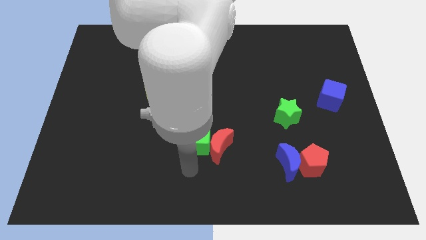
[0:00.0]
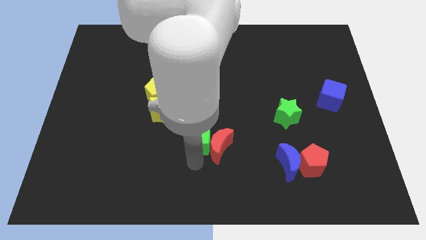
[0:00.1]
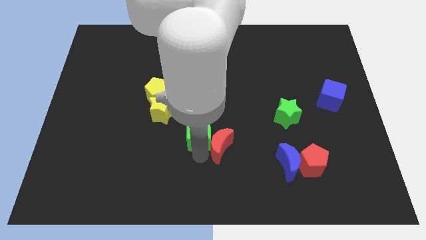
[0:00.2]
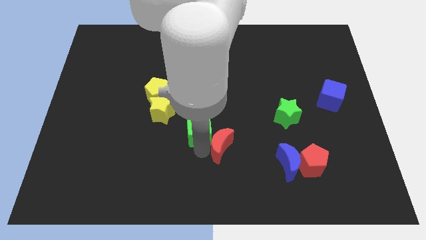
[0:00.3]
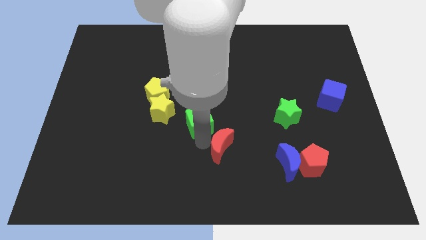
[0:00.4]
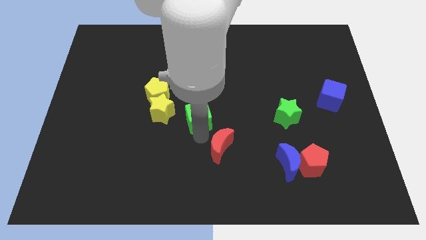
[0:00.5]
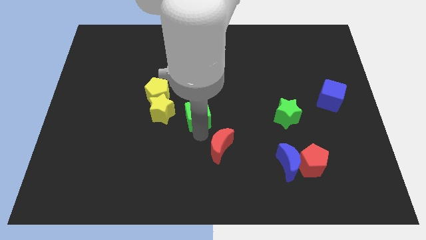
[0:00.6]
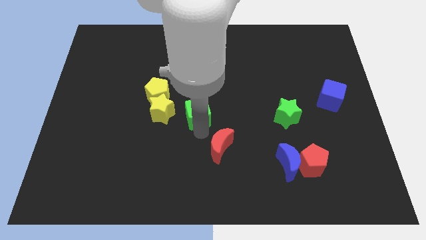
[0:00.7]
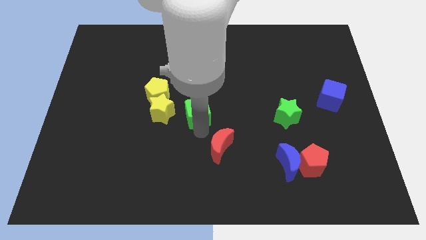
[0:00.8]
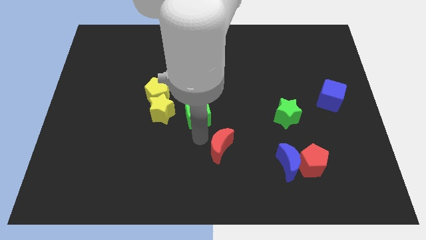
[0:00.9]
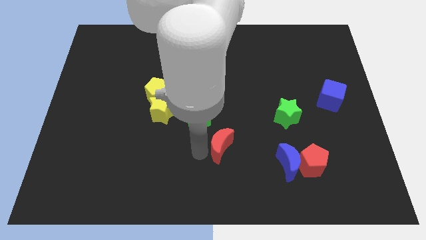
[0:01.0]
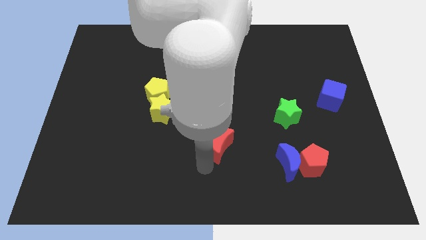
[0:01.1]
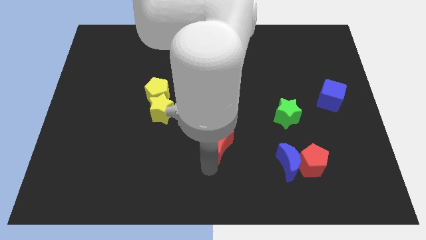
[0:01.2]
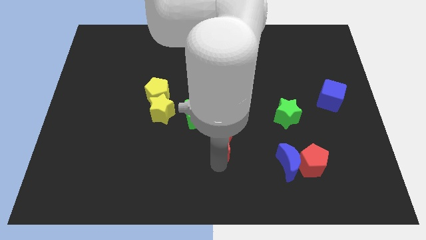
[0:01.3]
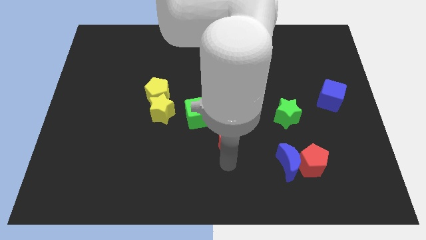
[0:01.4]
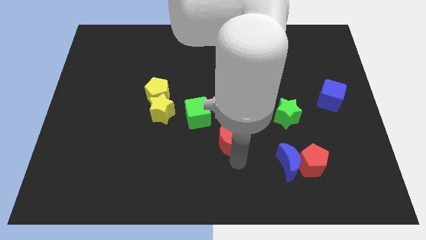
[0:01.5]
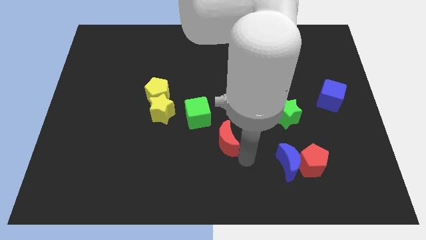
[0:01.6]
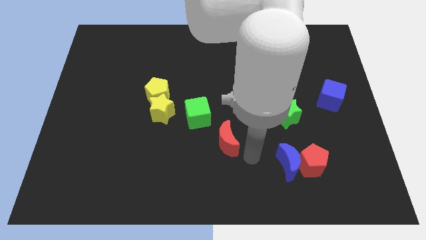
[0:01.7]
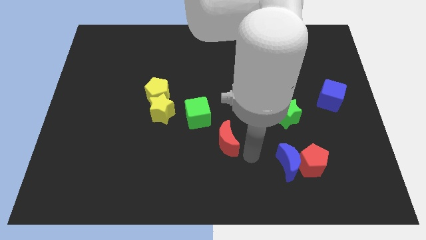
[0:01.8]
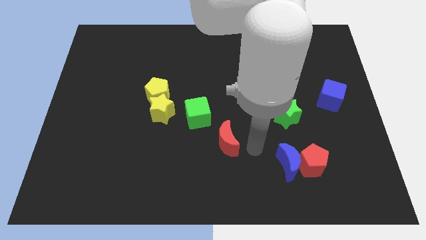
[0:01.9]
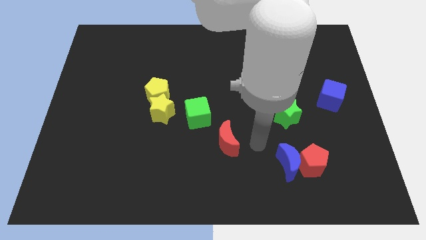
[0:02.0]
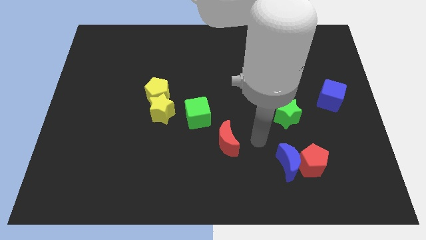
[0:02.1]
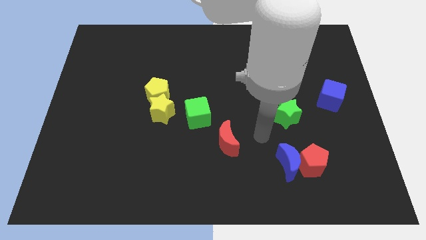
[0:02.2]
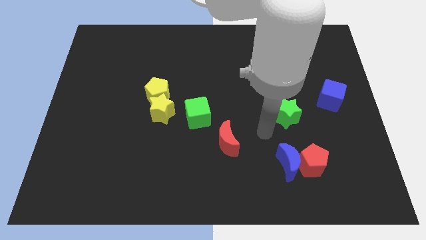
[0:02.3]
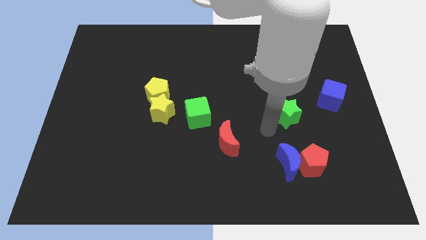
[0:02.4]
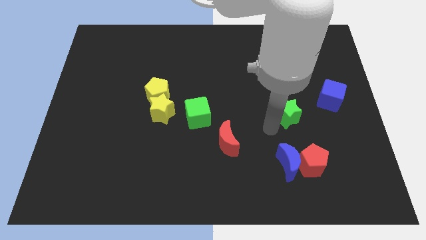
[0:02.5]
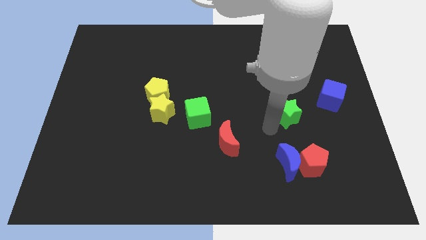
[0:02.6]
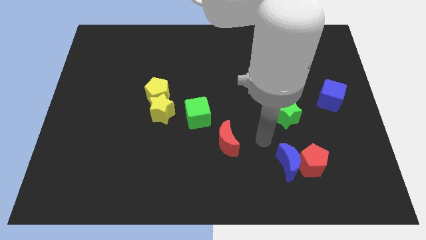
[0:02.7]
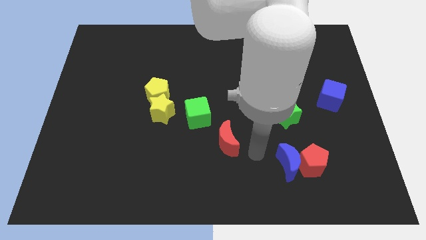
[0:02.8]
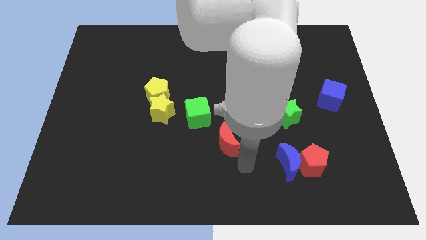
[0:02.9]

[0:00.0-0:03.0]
separate the green cube from the red moon

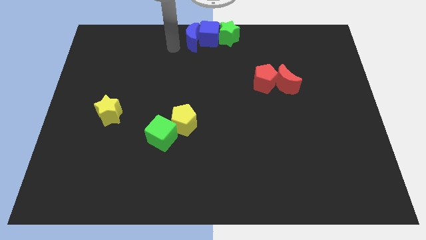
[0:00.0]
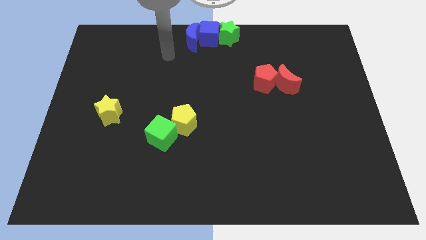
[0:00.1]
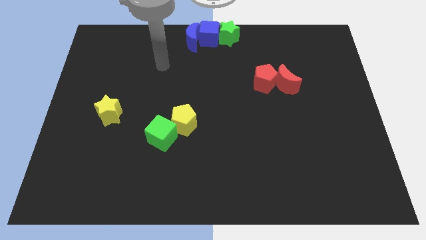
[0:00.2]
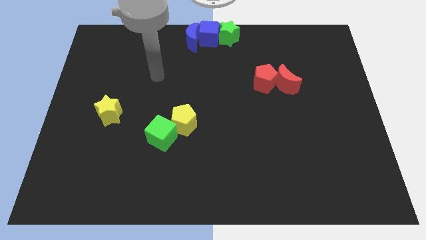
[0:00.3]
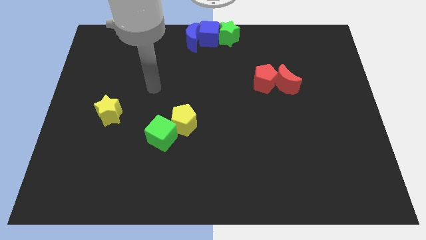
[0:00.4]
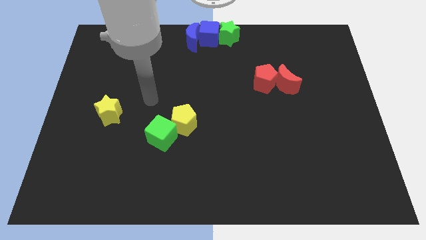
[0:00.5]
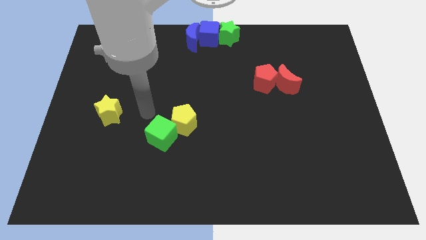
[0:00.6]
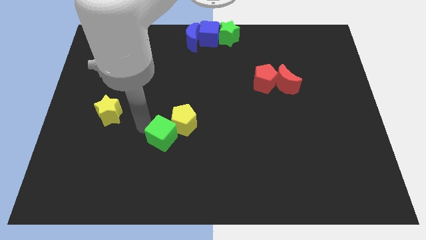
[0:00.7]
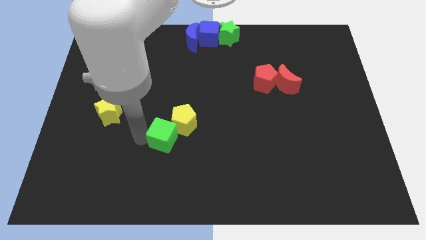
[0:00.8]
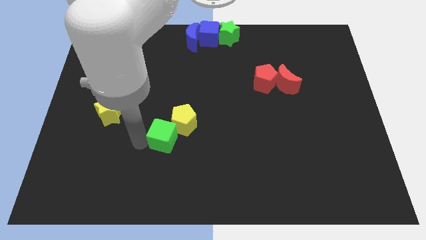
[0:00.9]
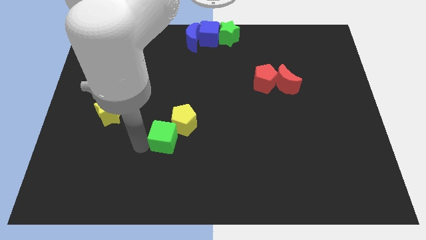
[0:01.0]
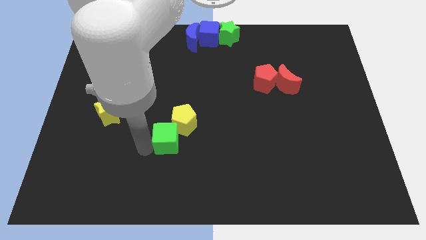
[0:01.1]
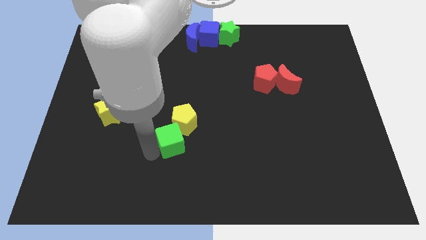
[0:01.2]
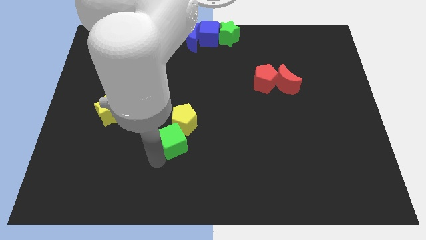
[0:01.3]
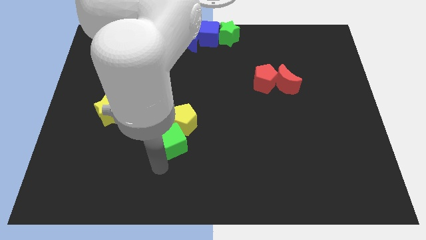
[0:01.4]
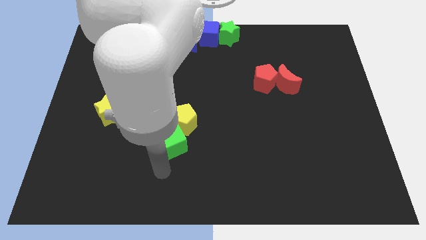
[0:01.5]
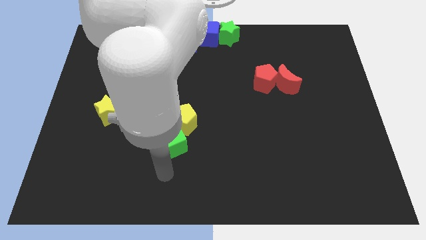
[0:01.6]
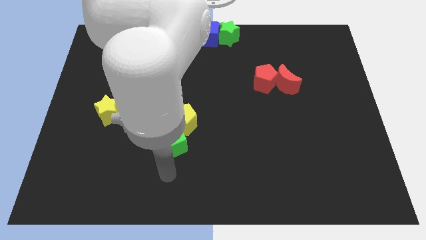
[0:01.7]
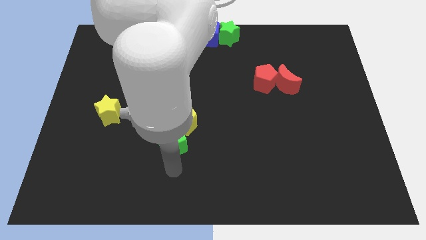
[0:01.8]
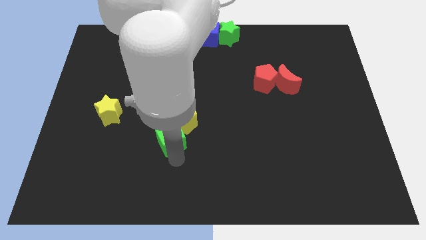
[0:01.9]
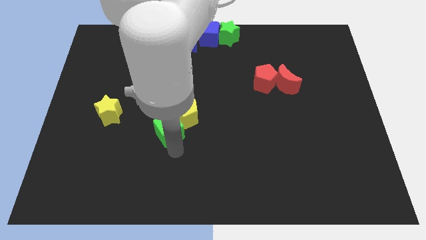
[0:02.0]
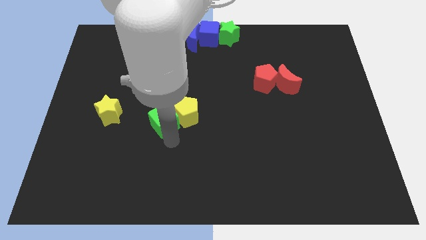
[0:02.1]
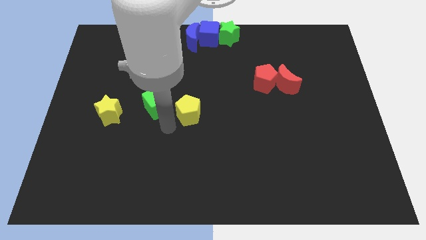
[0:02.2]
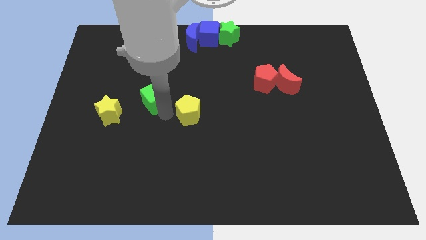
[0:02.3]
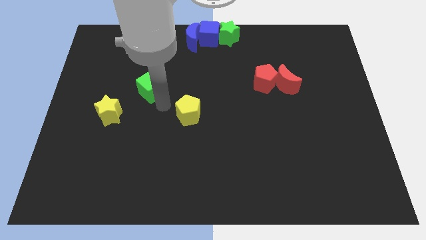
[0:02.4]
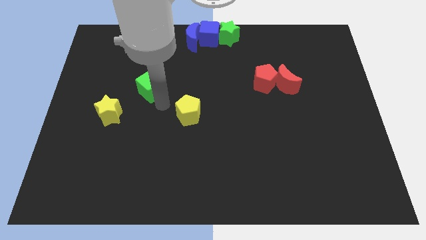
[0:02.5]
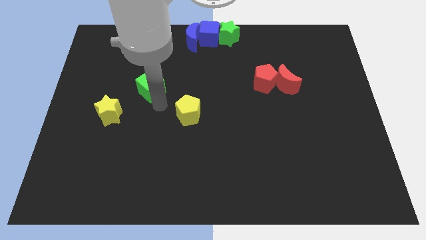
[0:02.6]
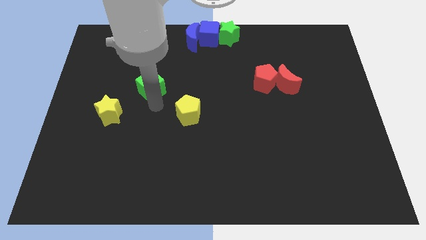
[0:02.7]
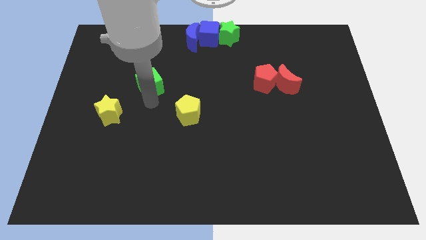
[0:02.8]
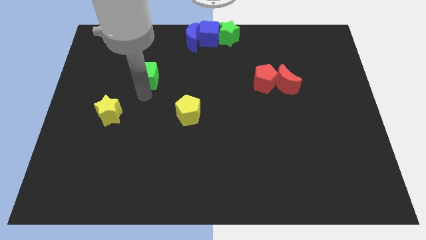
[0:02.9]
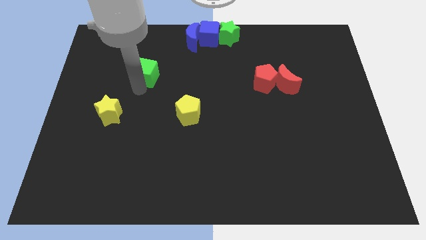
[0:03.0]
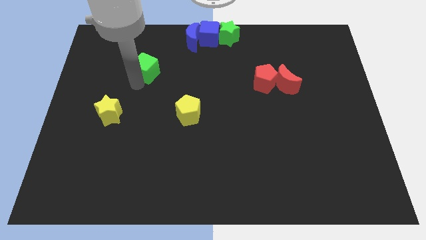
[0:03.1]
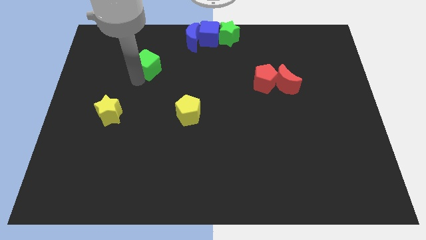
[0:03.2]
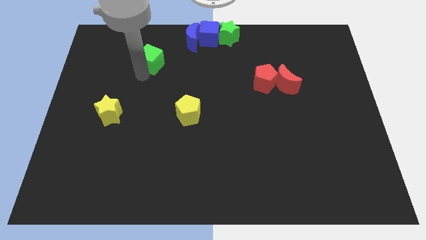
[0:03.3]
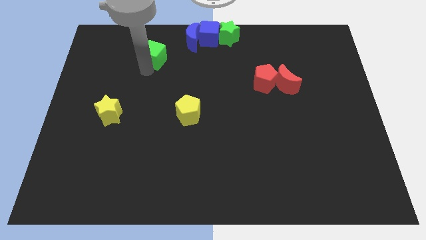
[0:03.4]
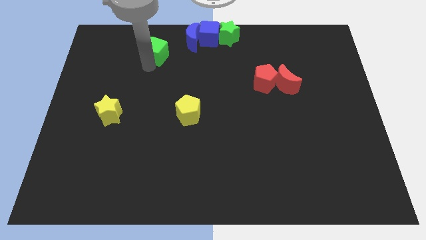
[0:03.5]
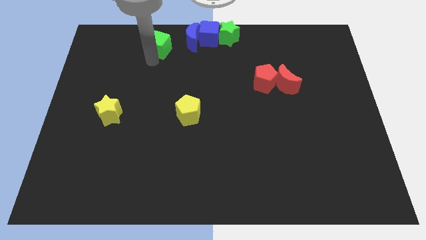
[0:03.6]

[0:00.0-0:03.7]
push the green cube towards the top of the board

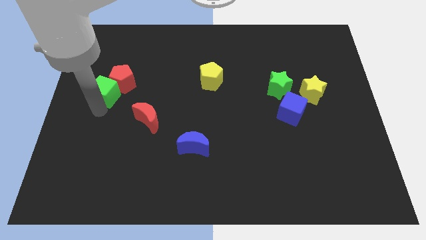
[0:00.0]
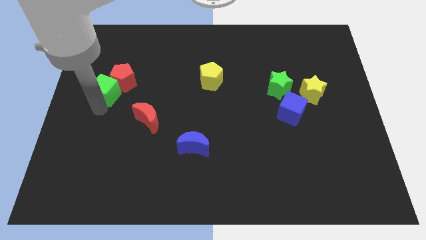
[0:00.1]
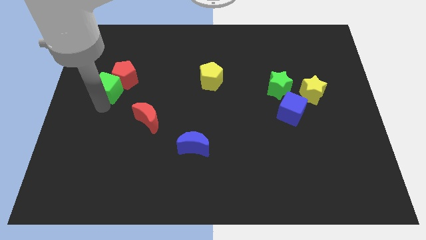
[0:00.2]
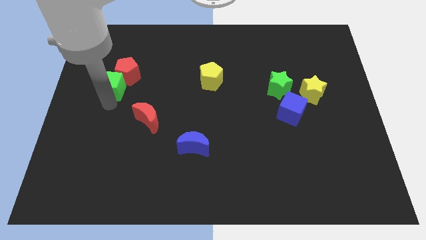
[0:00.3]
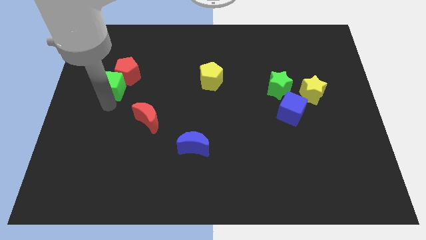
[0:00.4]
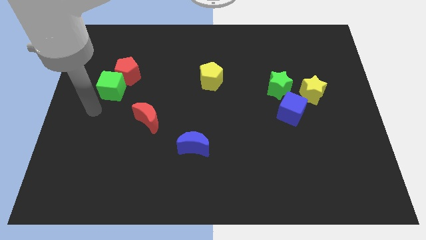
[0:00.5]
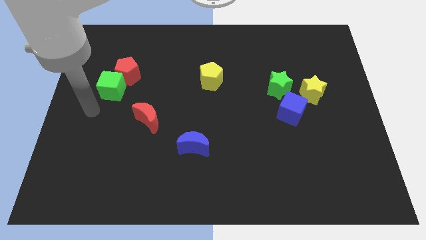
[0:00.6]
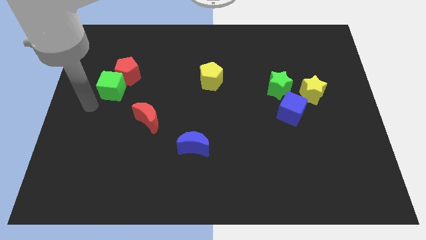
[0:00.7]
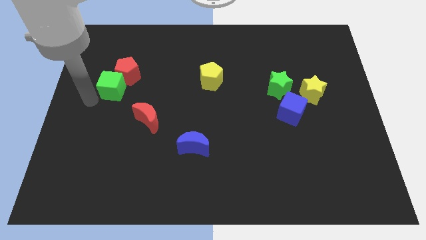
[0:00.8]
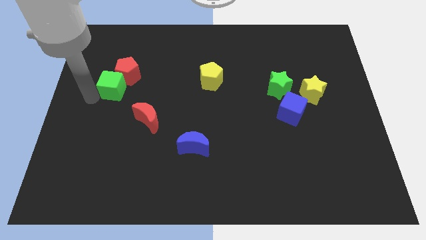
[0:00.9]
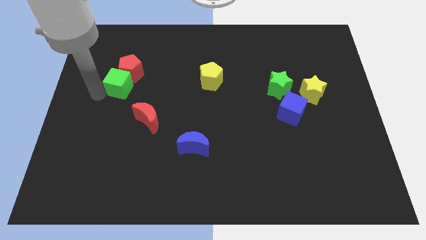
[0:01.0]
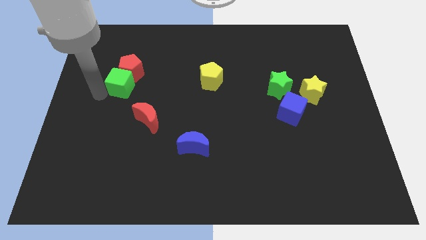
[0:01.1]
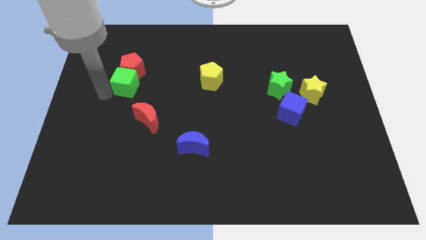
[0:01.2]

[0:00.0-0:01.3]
move the green cube into the bottom of the red pentagon

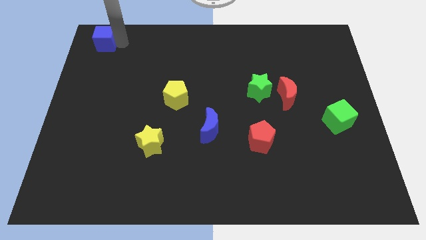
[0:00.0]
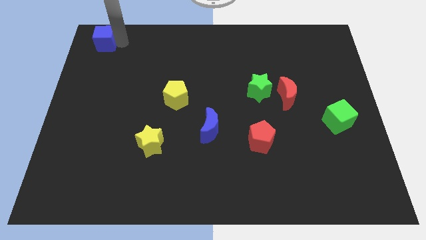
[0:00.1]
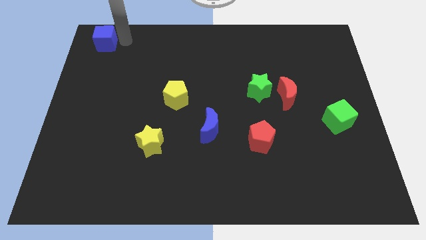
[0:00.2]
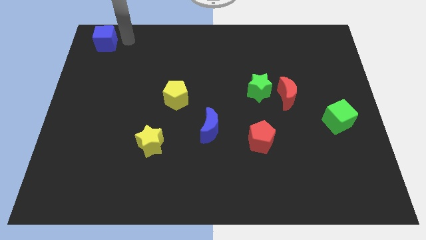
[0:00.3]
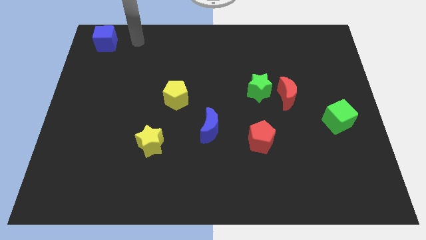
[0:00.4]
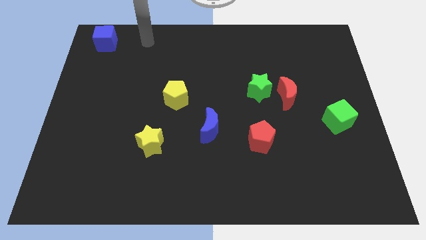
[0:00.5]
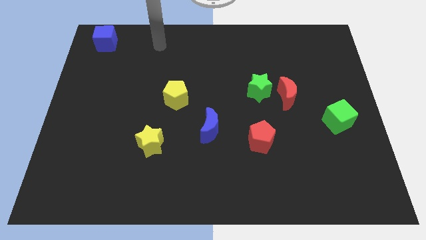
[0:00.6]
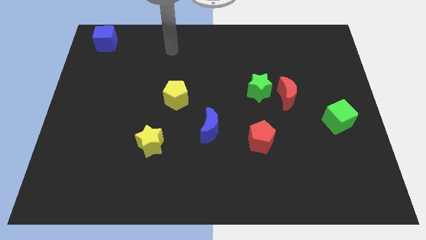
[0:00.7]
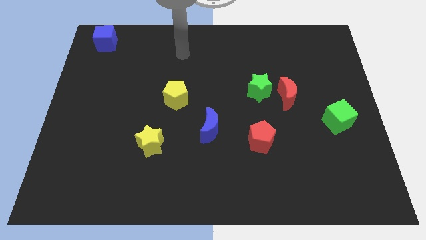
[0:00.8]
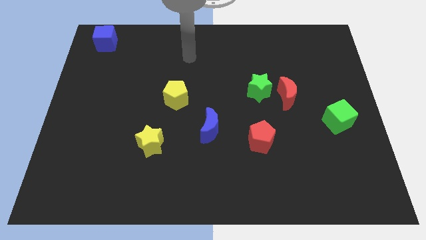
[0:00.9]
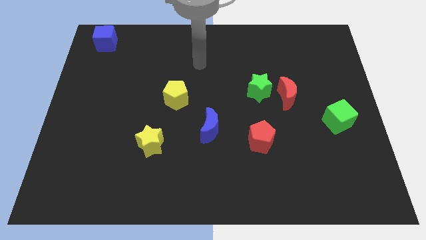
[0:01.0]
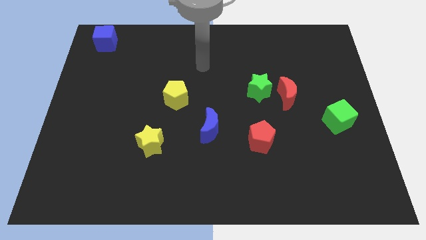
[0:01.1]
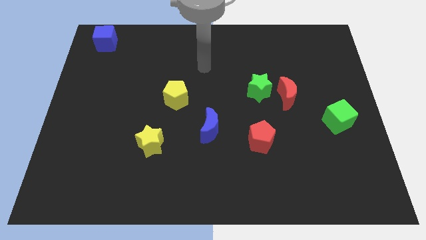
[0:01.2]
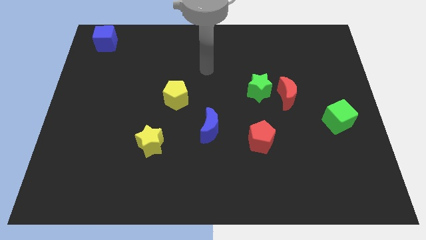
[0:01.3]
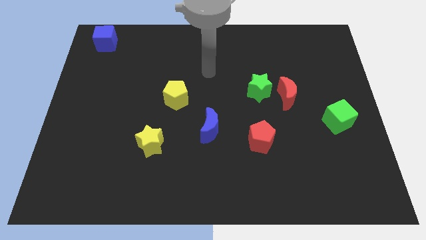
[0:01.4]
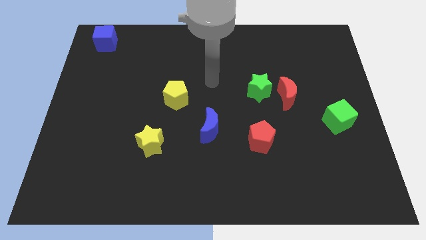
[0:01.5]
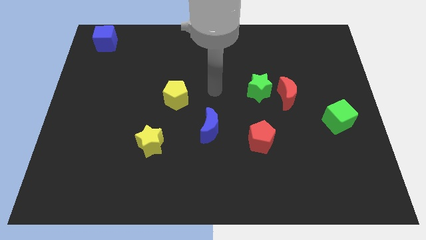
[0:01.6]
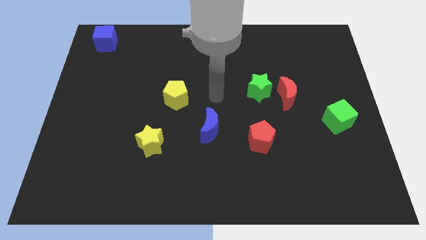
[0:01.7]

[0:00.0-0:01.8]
move the arm away from the blue cube
